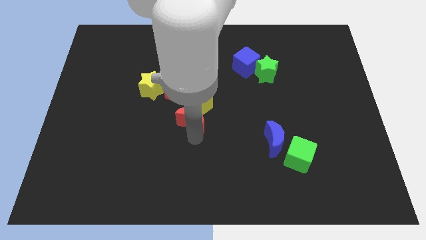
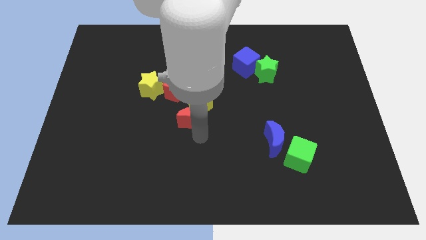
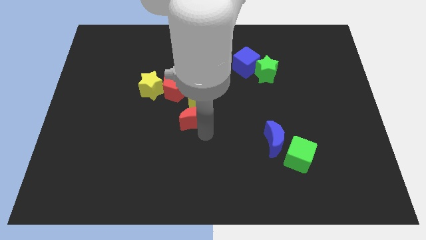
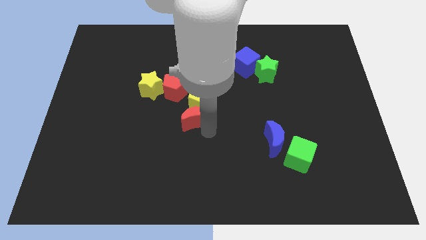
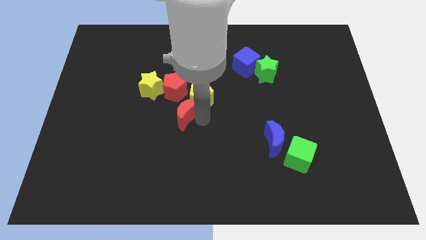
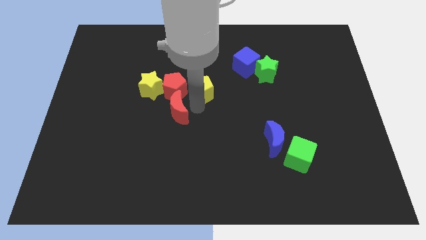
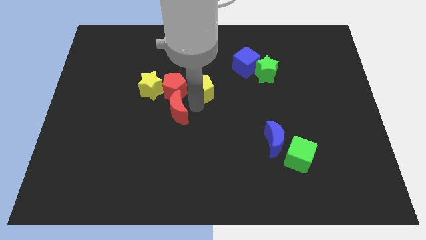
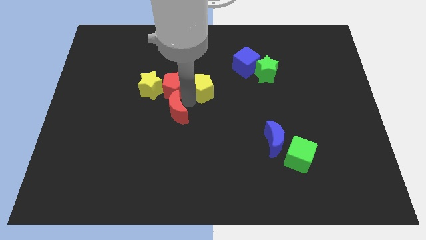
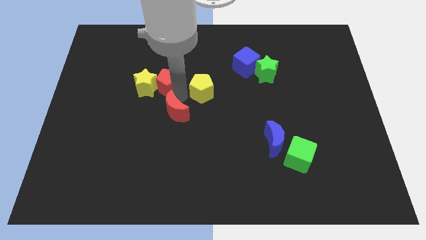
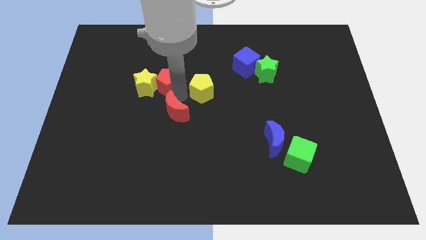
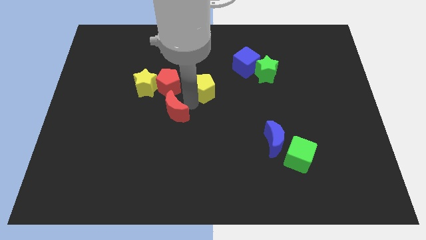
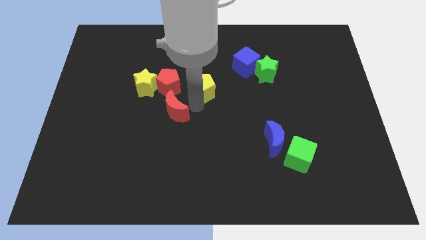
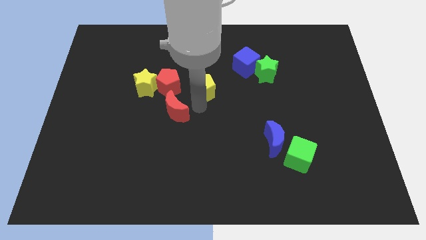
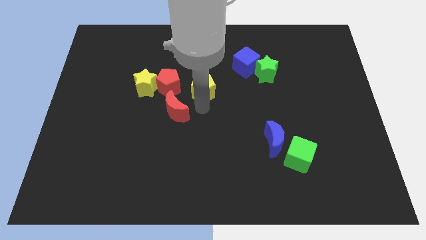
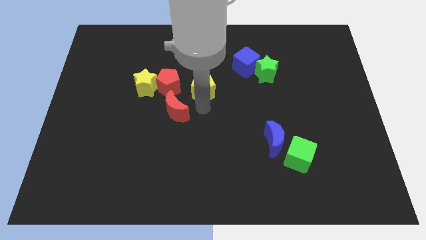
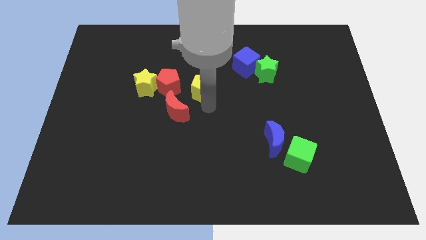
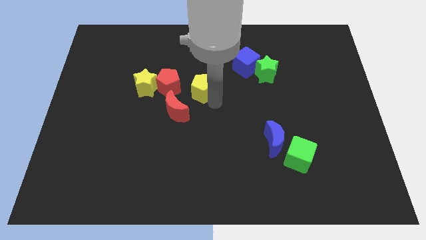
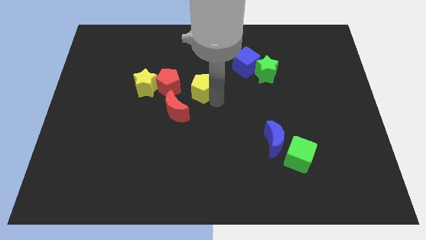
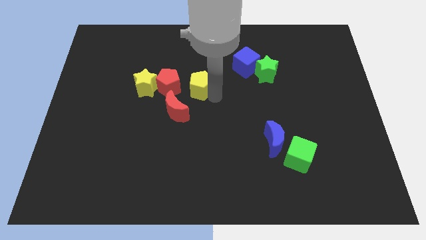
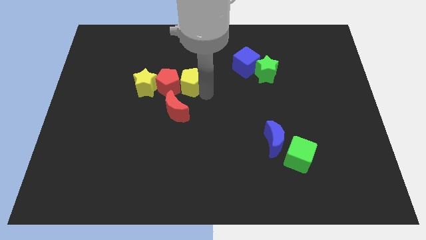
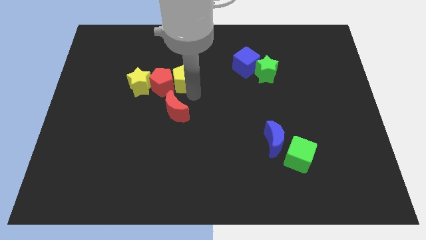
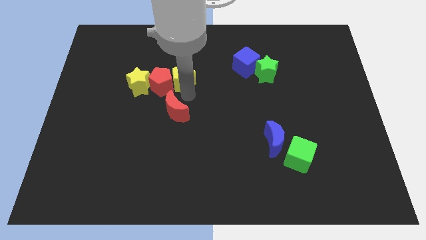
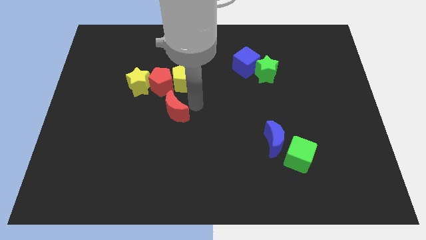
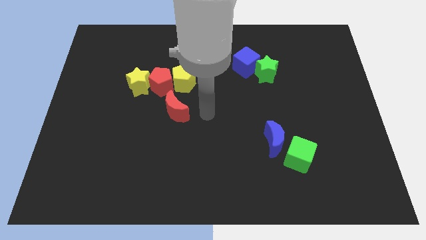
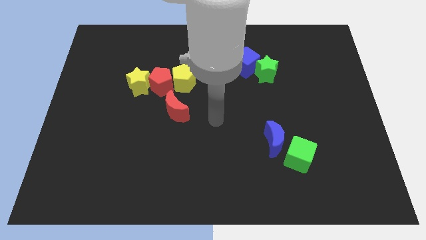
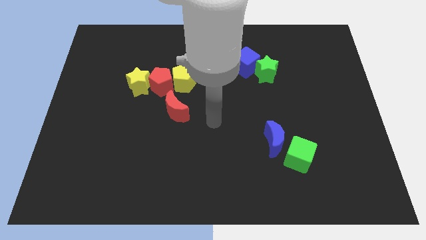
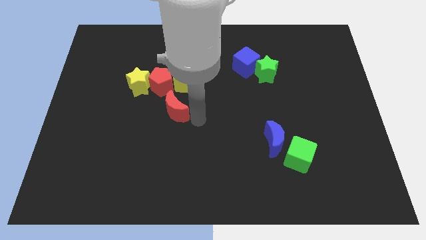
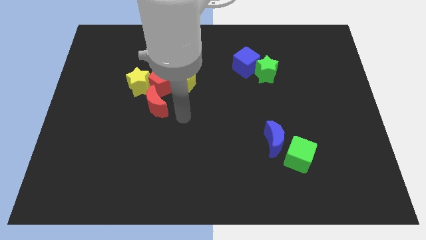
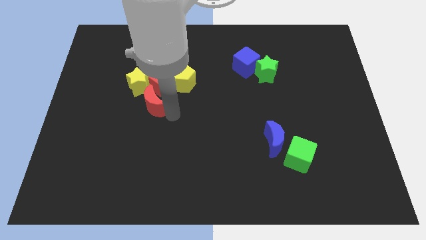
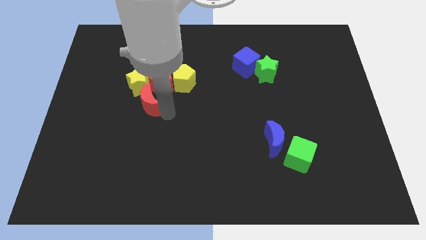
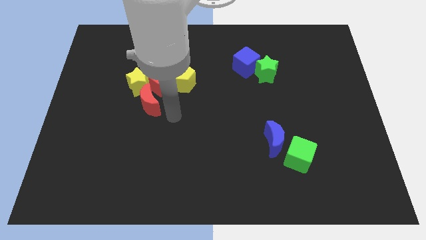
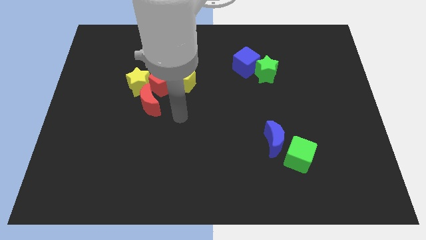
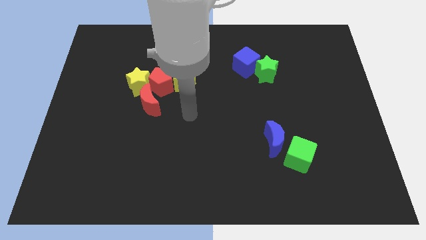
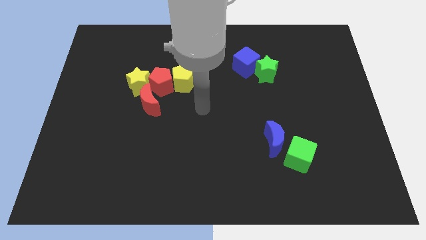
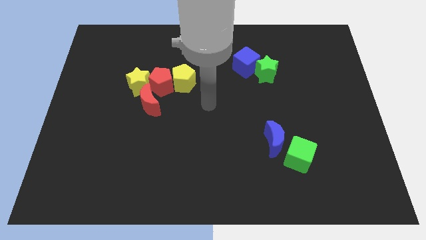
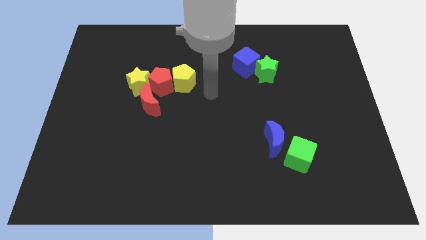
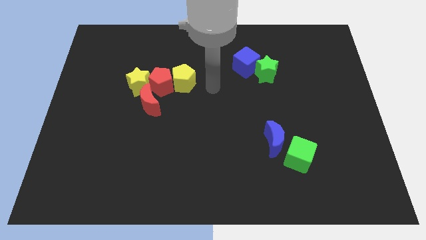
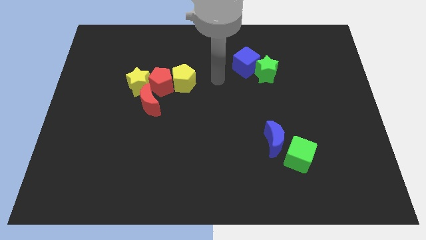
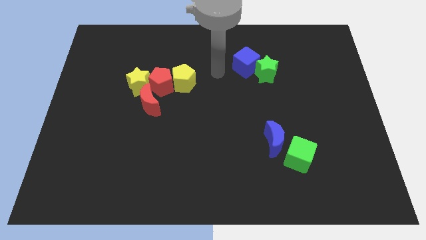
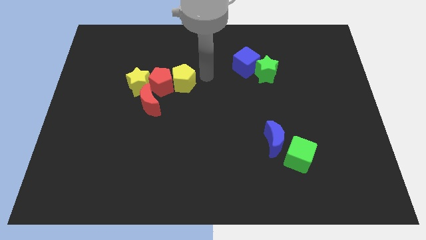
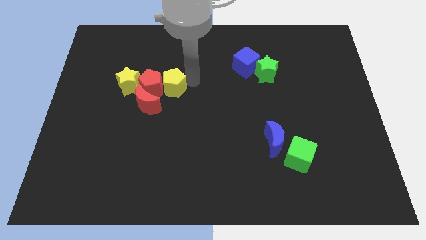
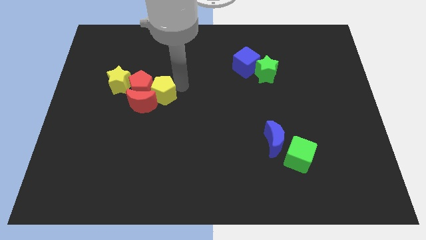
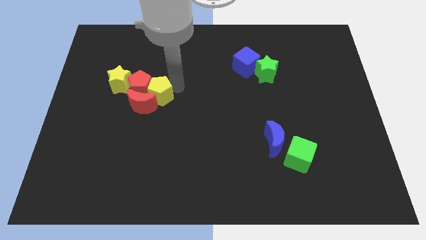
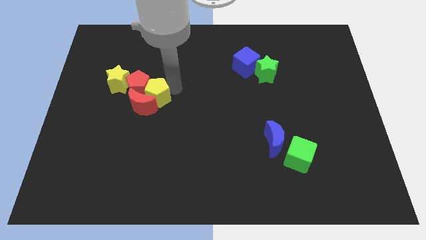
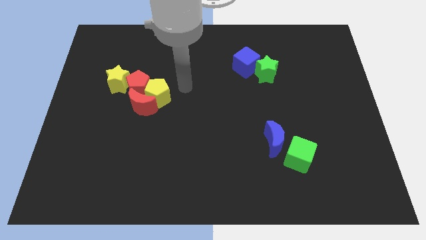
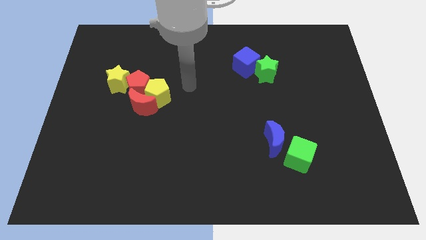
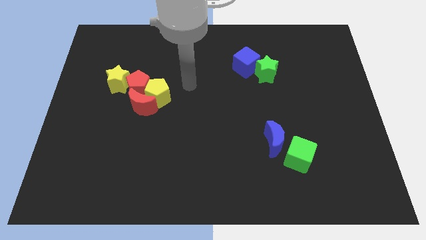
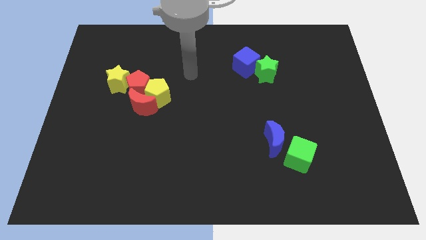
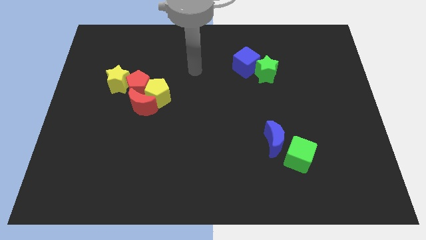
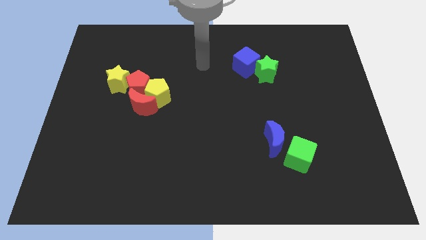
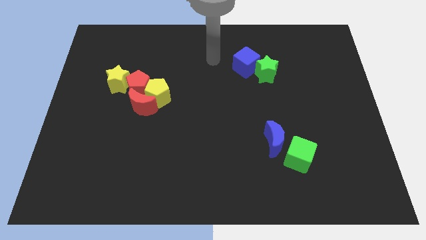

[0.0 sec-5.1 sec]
adjust all red and yellow blocks towards center left

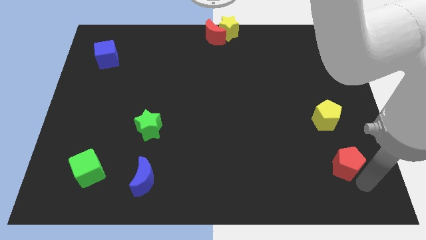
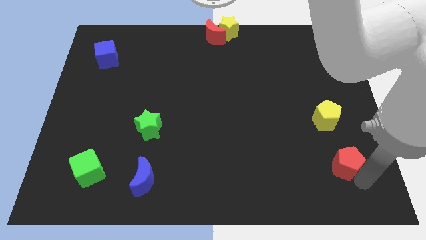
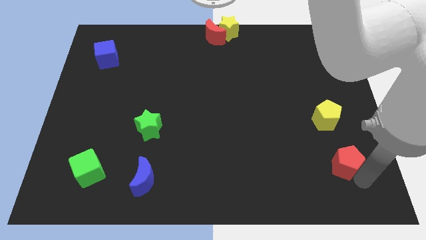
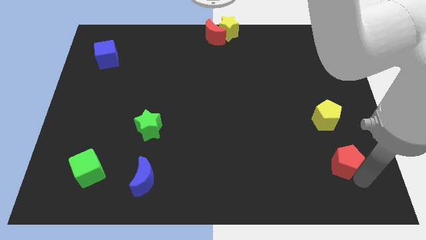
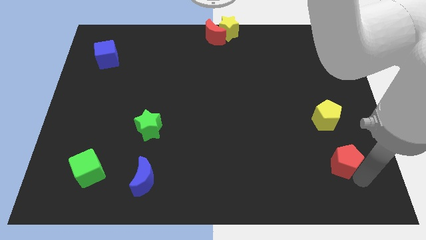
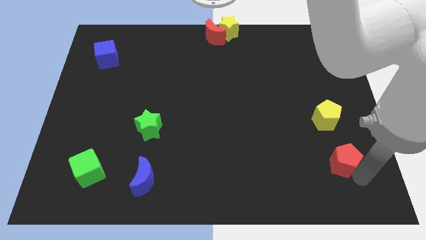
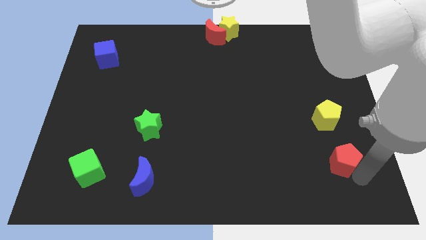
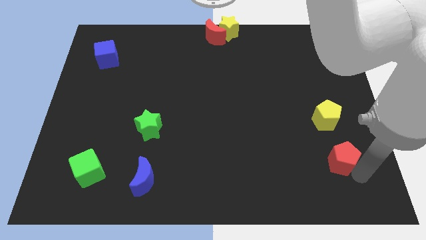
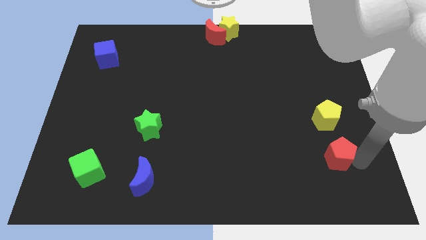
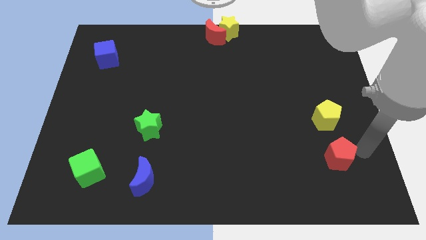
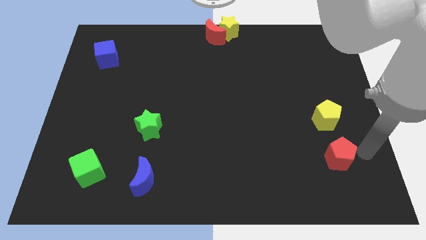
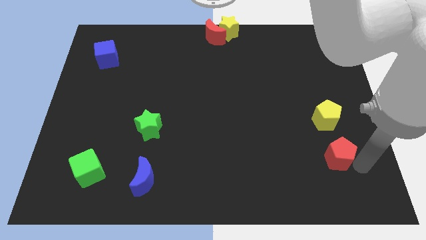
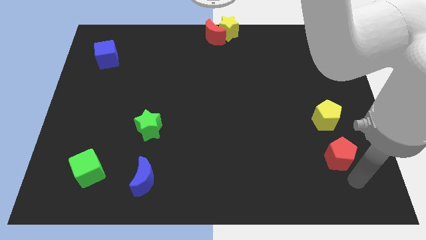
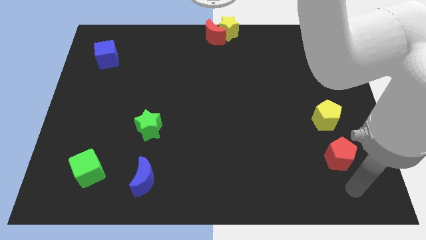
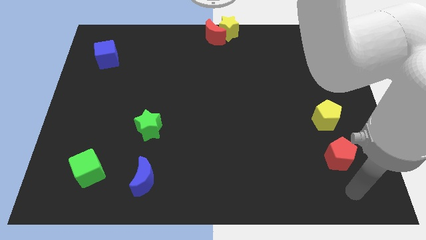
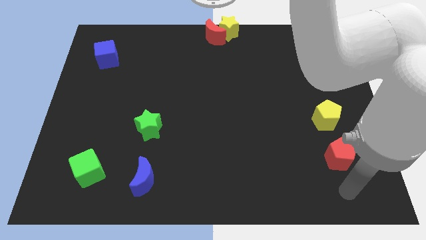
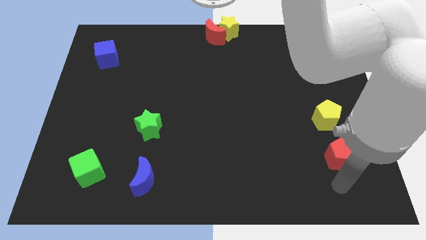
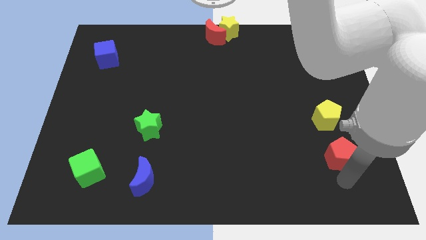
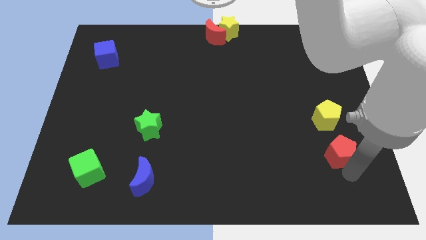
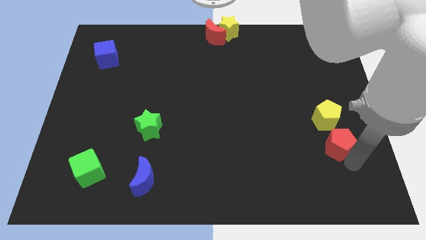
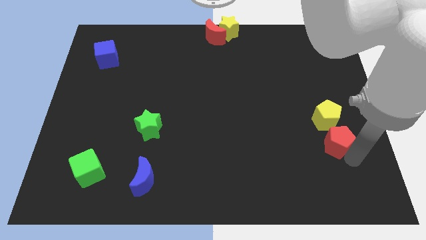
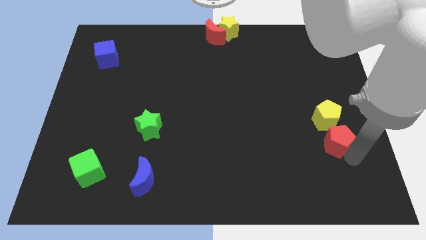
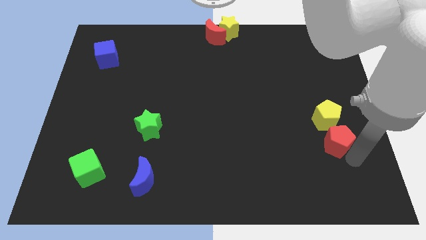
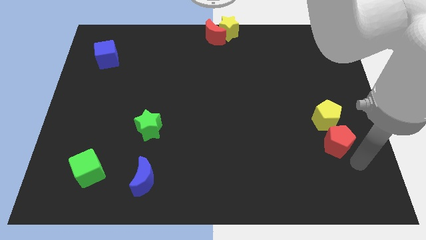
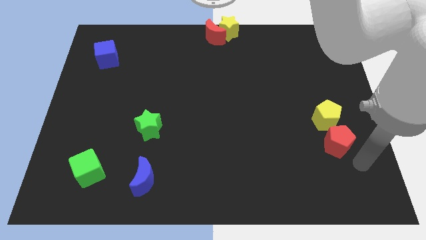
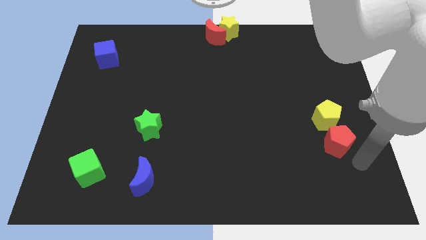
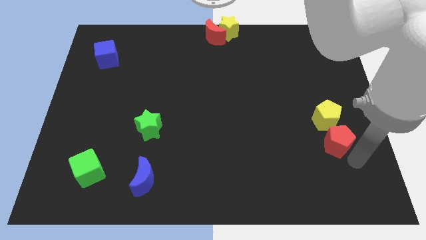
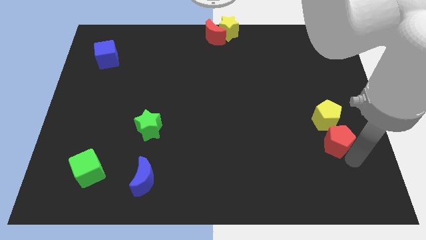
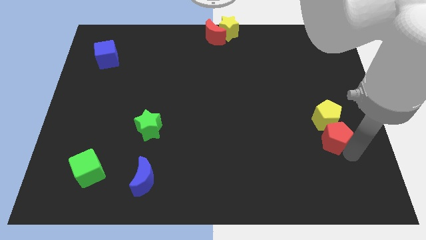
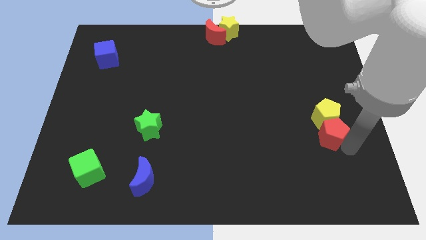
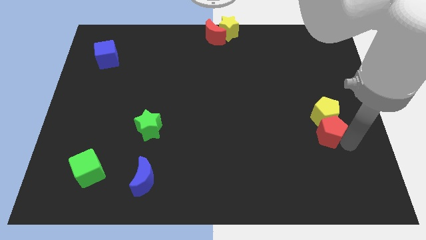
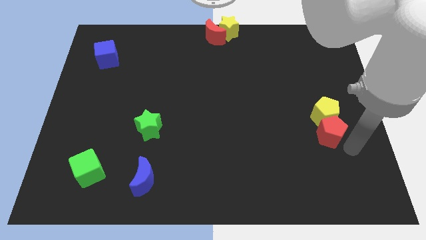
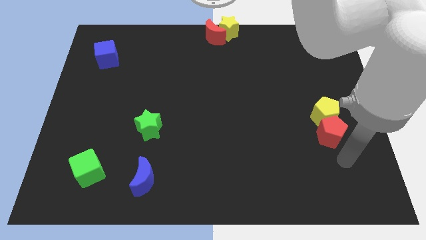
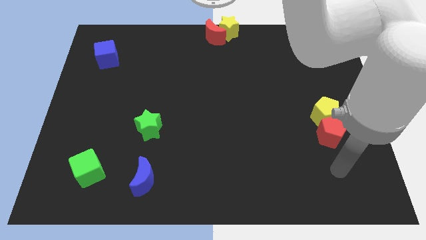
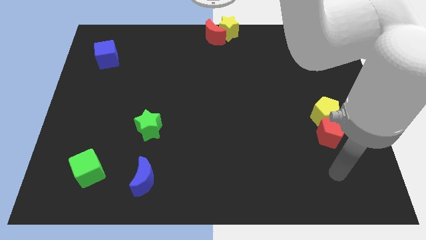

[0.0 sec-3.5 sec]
push the red pentagon into the yellow pentagon

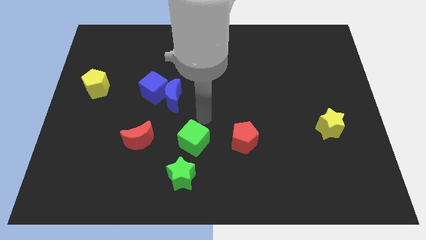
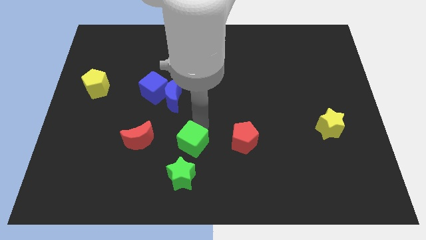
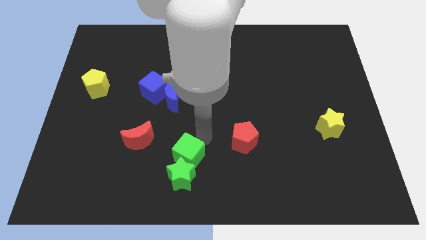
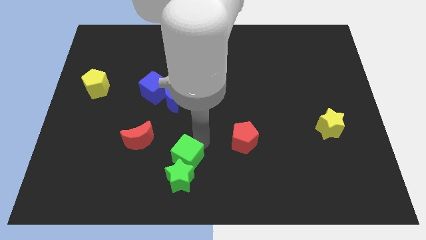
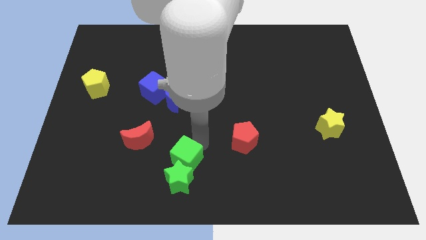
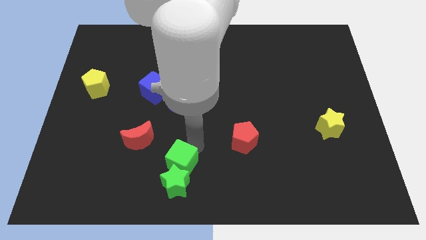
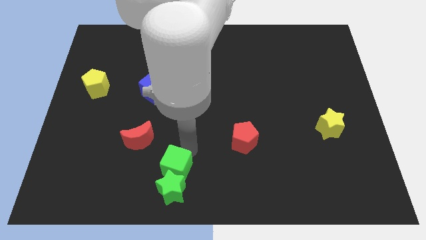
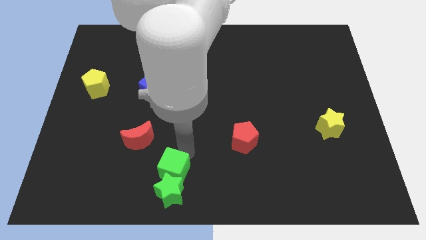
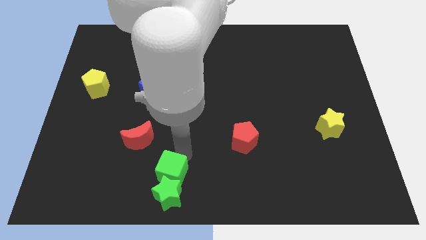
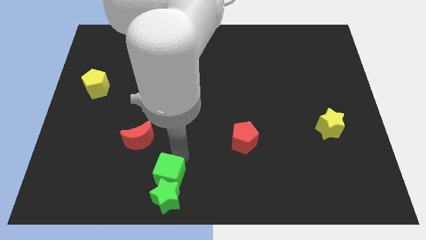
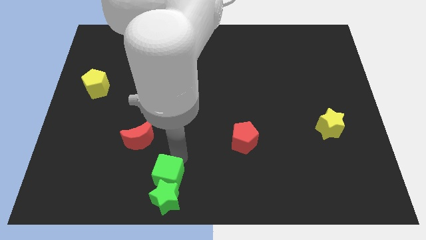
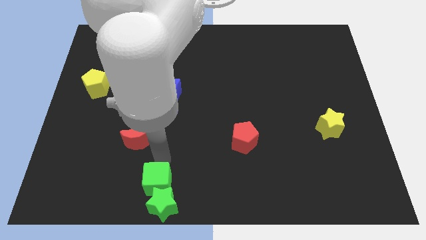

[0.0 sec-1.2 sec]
place the green blocks diagonally to red pentagon
